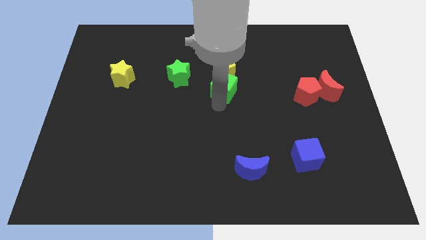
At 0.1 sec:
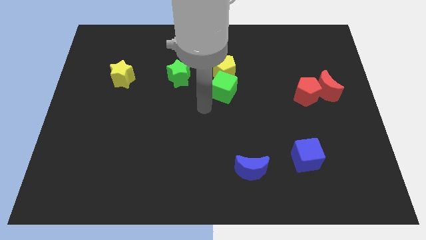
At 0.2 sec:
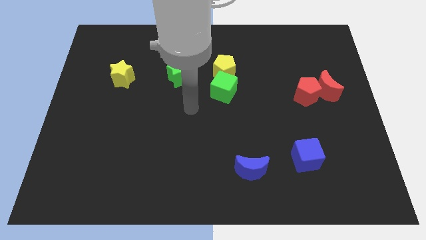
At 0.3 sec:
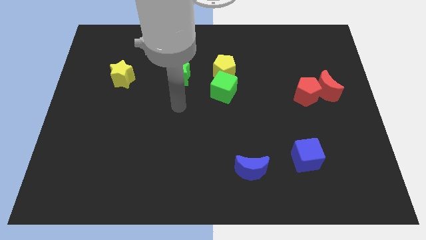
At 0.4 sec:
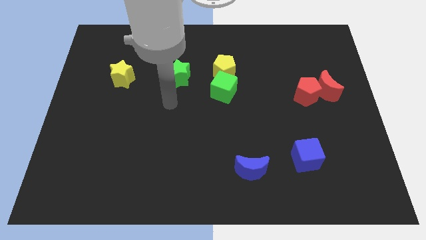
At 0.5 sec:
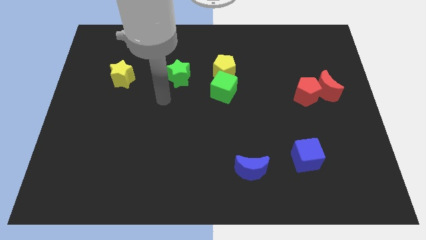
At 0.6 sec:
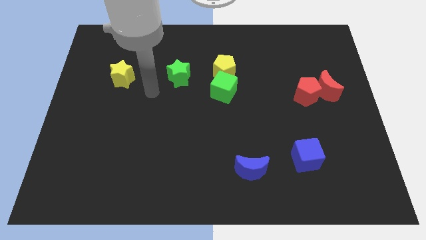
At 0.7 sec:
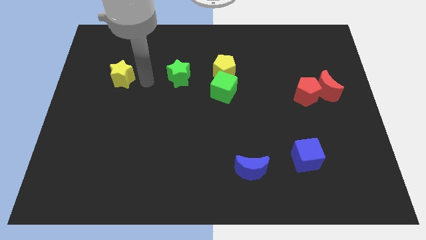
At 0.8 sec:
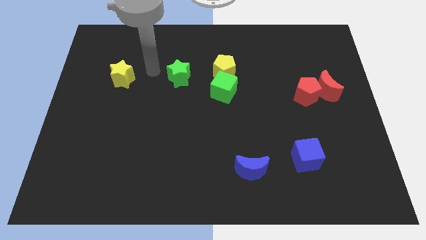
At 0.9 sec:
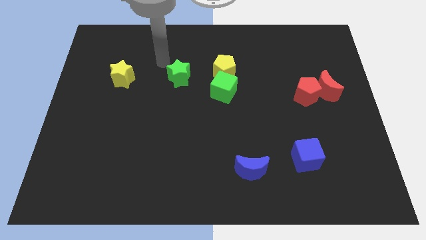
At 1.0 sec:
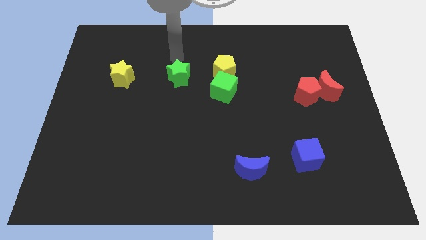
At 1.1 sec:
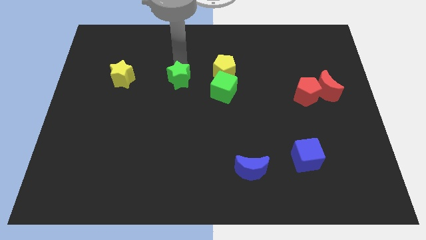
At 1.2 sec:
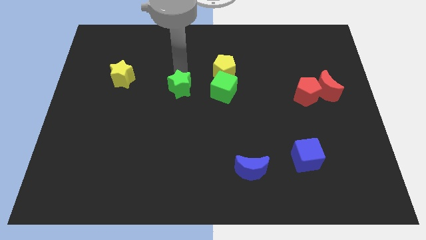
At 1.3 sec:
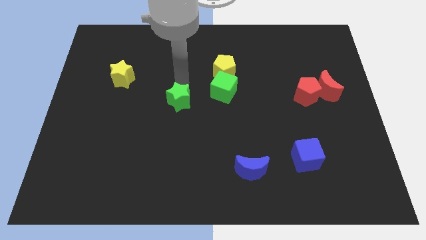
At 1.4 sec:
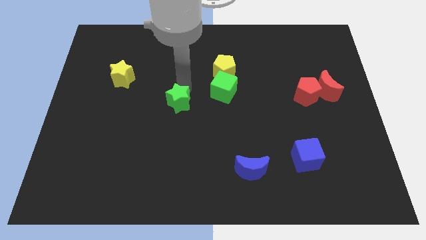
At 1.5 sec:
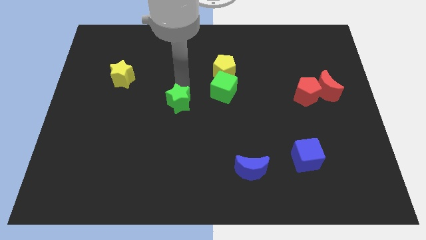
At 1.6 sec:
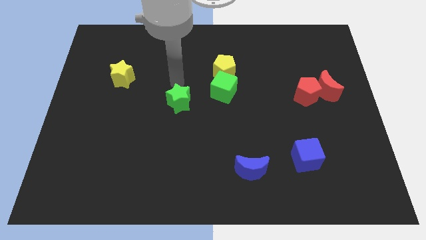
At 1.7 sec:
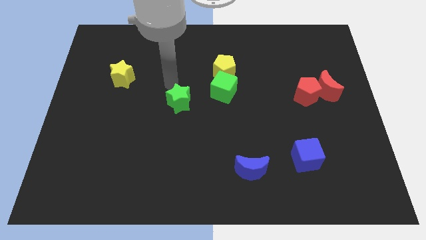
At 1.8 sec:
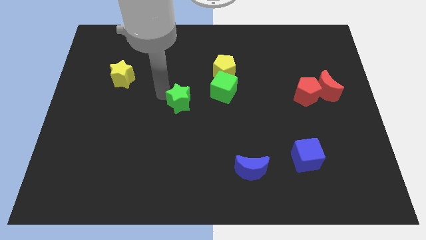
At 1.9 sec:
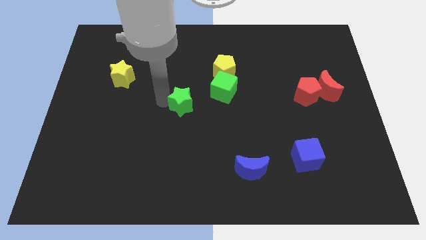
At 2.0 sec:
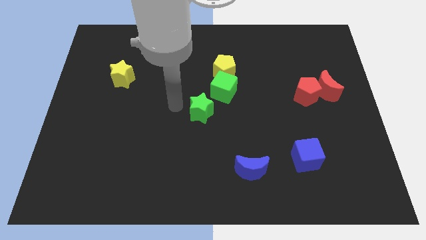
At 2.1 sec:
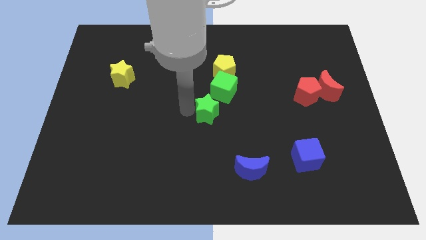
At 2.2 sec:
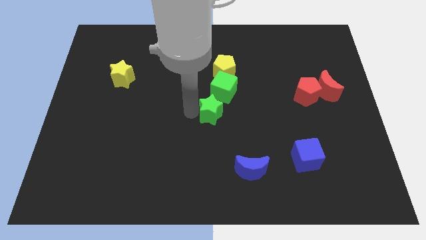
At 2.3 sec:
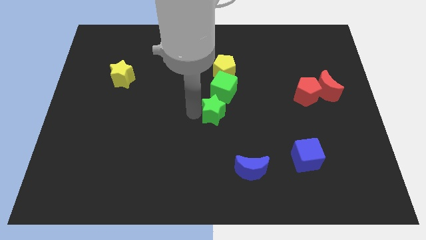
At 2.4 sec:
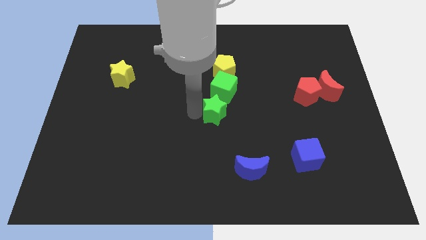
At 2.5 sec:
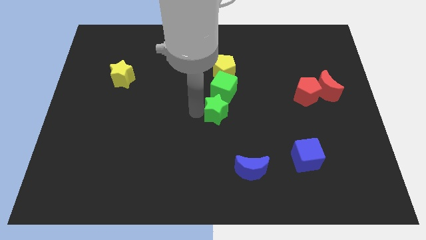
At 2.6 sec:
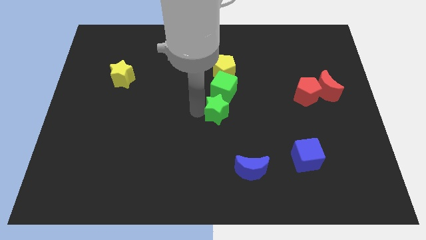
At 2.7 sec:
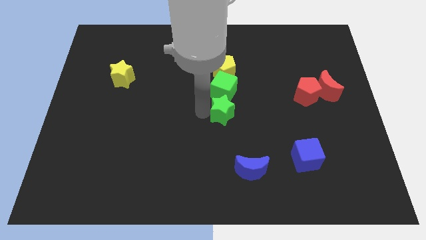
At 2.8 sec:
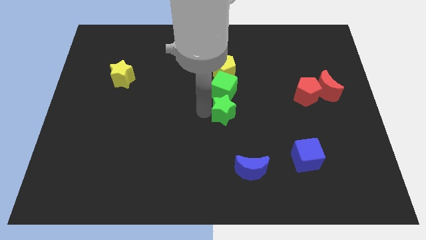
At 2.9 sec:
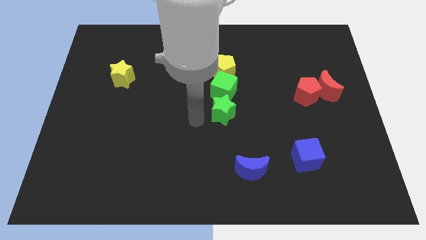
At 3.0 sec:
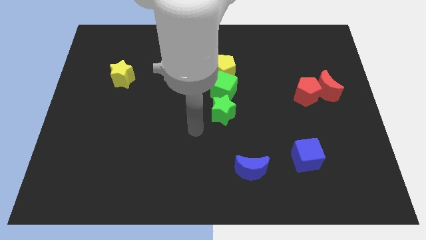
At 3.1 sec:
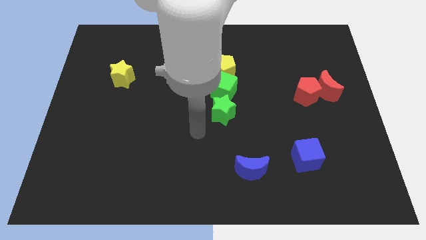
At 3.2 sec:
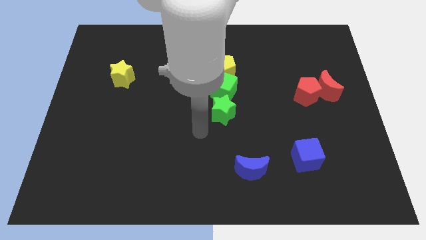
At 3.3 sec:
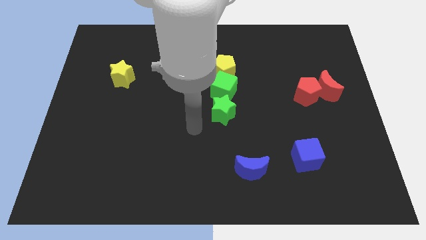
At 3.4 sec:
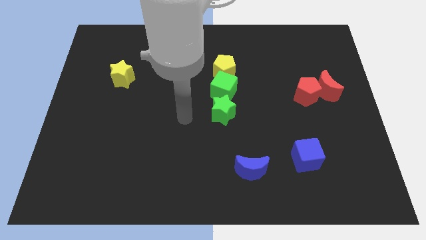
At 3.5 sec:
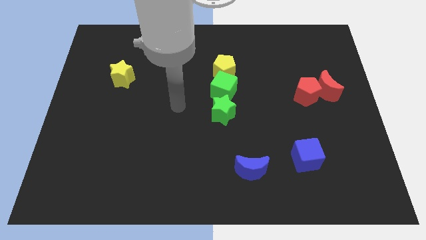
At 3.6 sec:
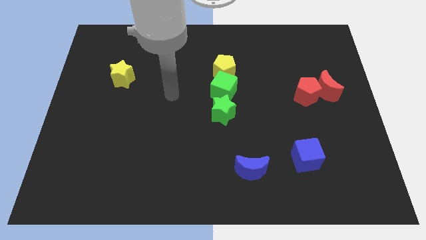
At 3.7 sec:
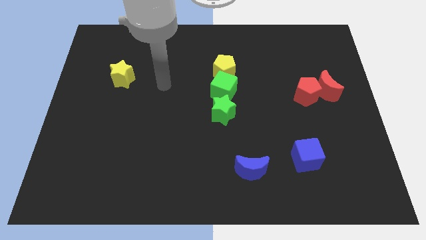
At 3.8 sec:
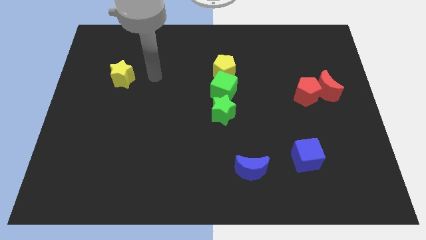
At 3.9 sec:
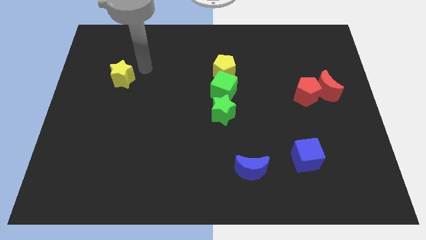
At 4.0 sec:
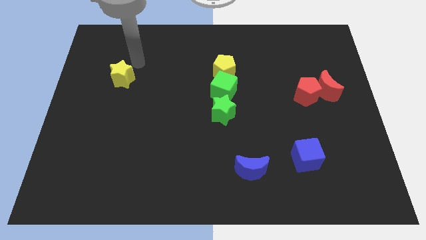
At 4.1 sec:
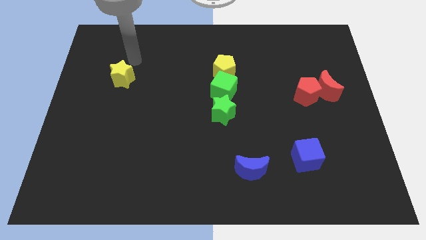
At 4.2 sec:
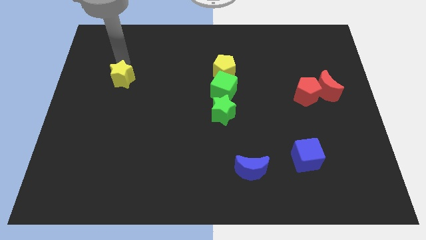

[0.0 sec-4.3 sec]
move the green star at the center

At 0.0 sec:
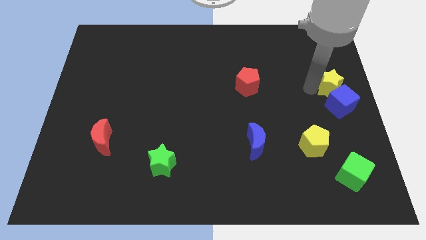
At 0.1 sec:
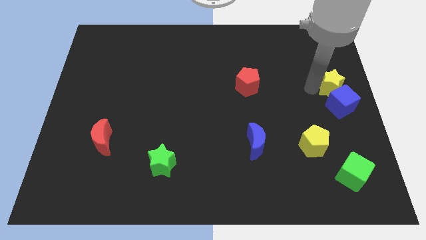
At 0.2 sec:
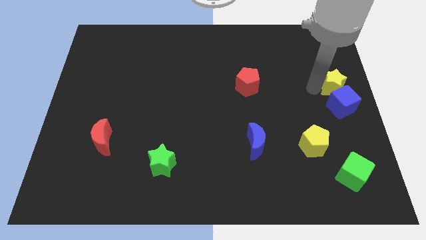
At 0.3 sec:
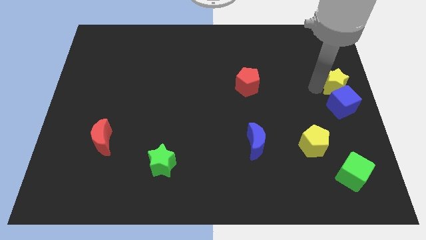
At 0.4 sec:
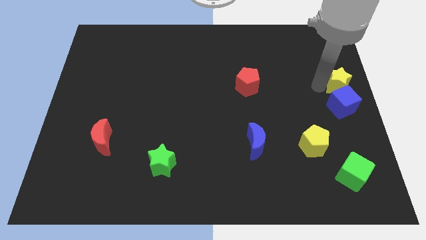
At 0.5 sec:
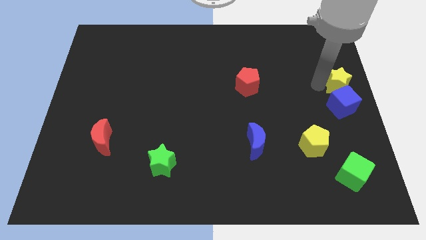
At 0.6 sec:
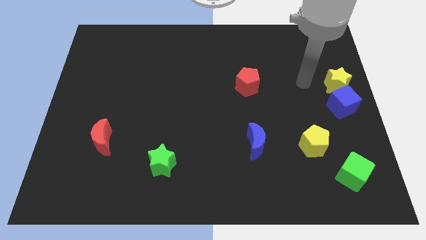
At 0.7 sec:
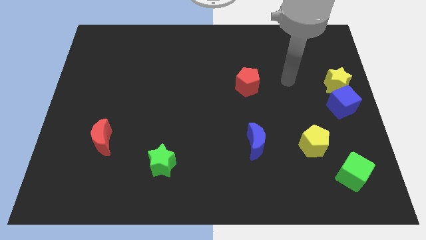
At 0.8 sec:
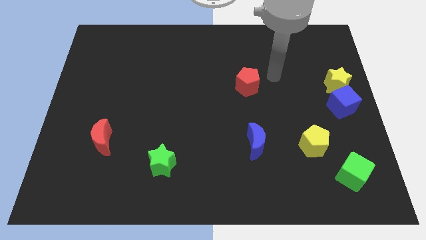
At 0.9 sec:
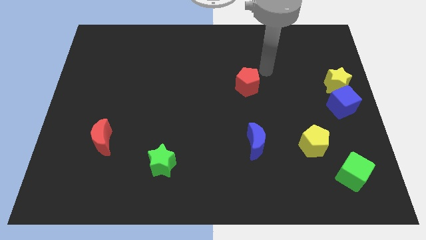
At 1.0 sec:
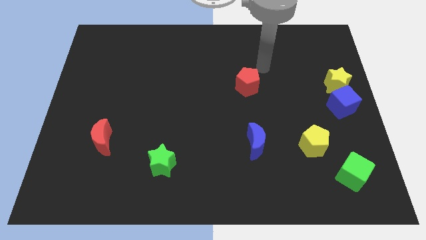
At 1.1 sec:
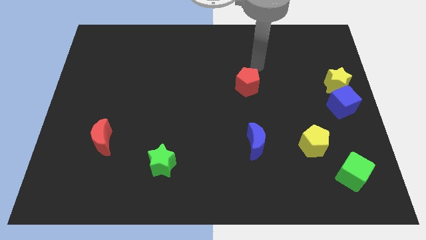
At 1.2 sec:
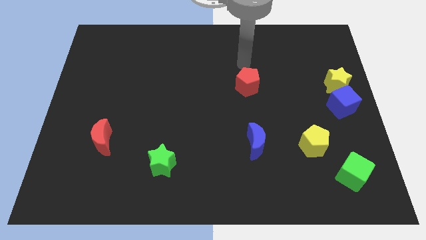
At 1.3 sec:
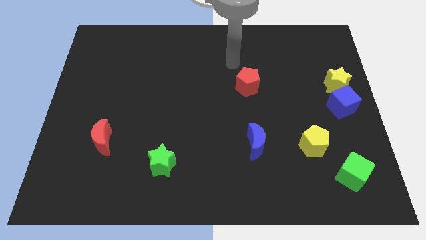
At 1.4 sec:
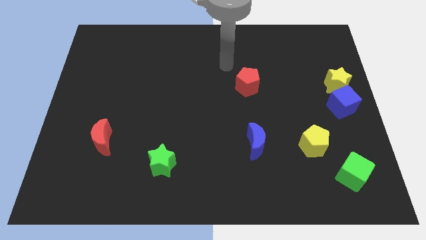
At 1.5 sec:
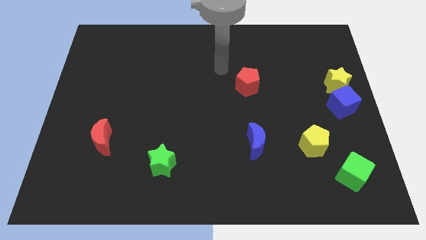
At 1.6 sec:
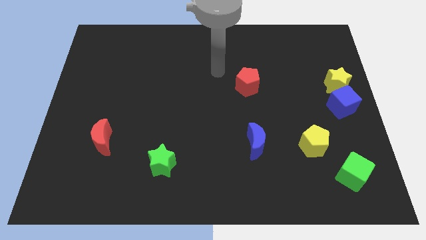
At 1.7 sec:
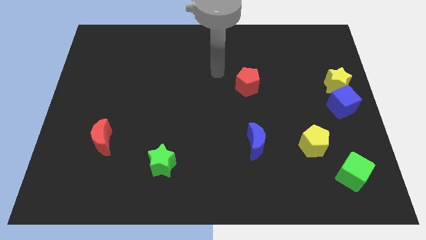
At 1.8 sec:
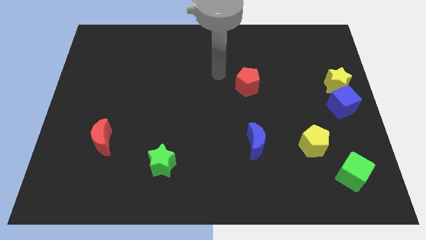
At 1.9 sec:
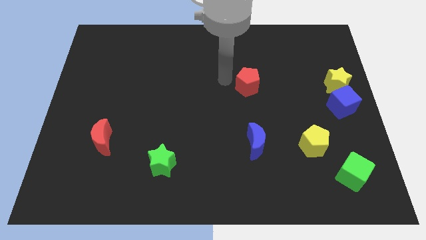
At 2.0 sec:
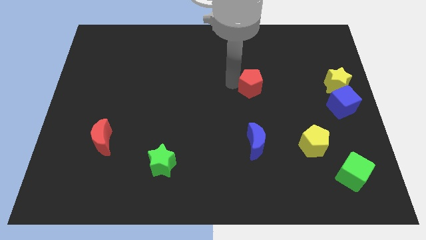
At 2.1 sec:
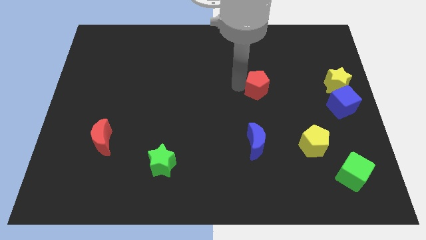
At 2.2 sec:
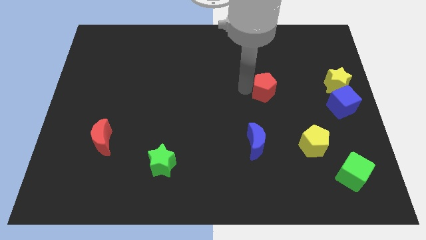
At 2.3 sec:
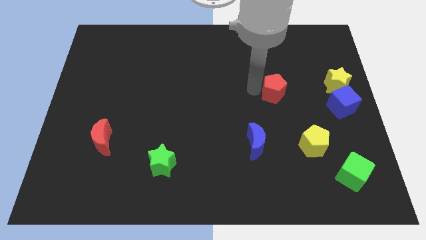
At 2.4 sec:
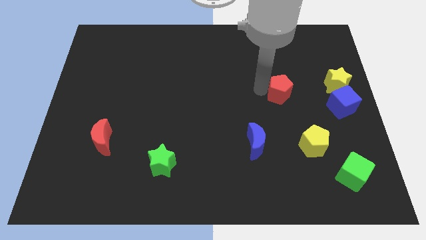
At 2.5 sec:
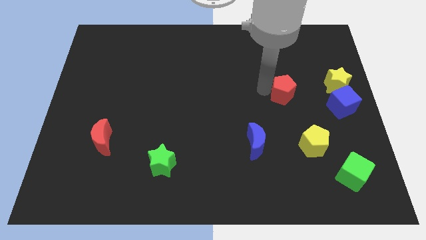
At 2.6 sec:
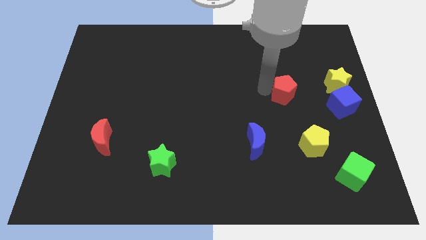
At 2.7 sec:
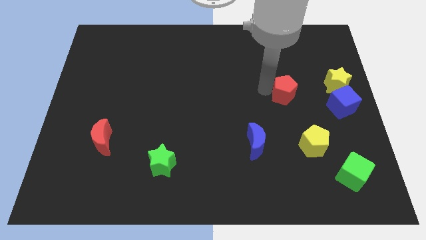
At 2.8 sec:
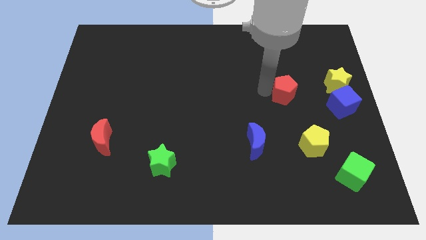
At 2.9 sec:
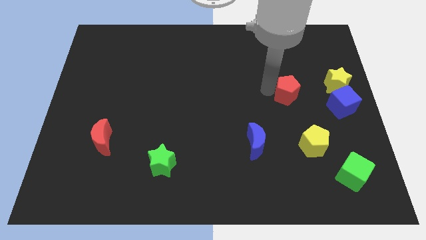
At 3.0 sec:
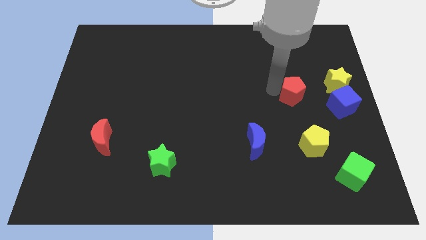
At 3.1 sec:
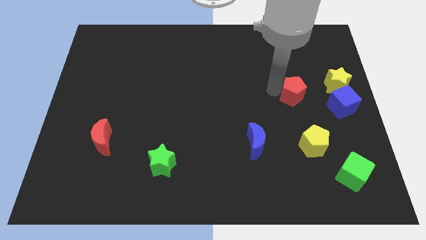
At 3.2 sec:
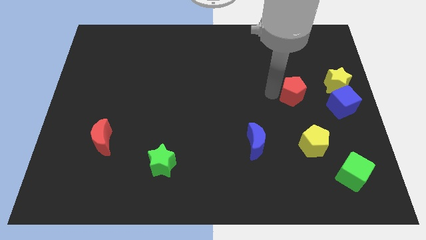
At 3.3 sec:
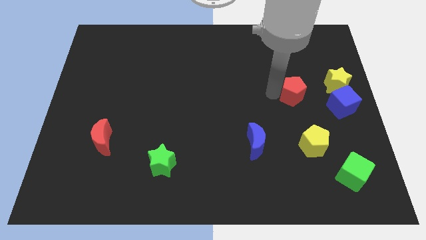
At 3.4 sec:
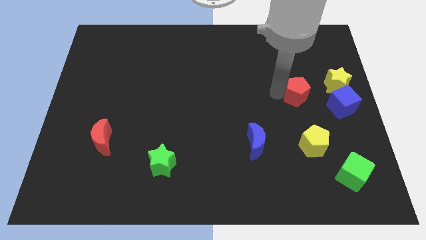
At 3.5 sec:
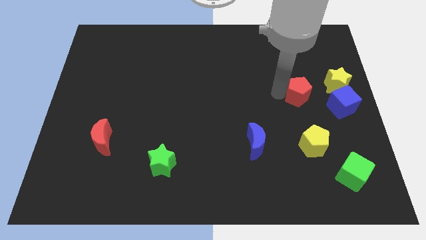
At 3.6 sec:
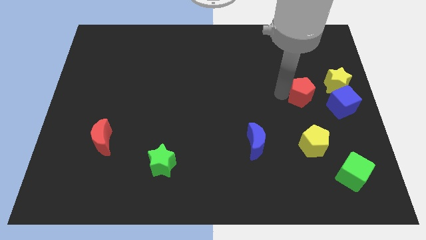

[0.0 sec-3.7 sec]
place the red pentagon diagonal to the left of the blue cube

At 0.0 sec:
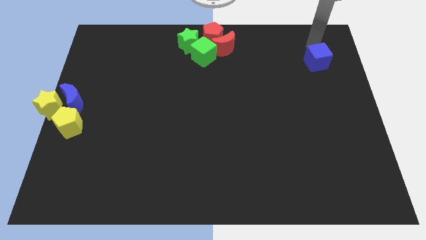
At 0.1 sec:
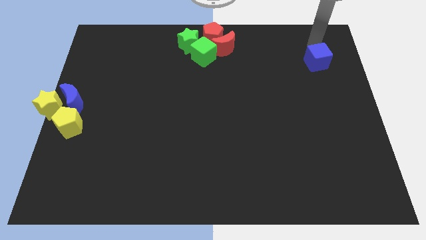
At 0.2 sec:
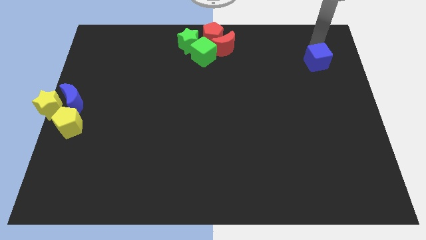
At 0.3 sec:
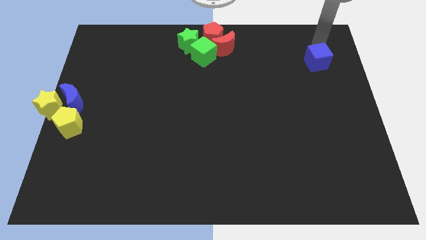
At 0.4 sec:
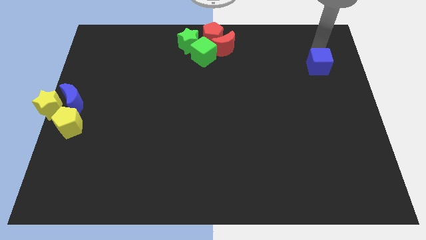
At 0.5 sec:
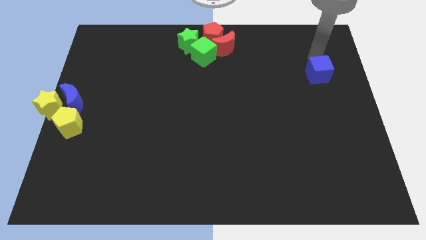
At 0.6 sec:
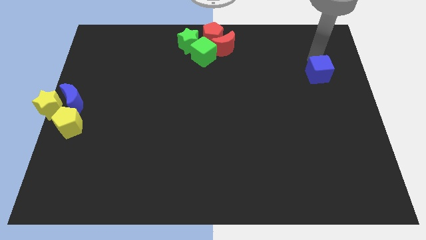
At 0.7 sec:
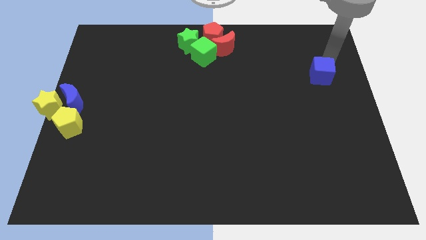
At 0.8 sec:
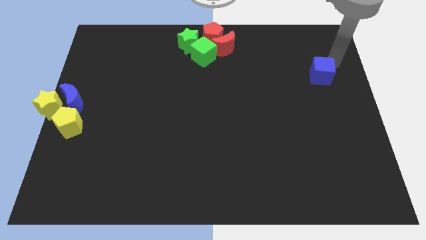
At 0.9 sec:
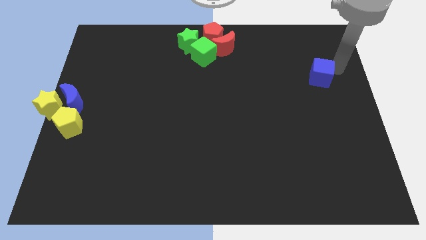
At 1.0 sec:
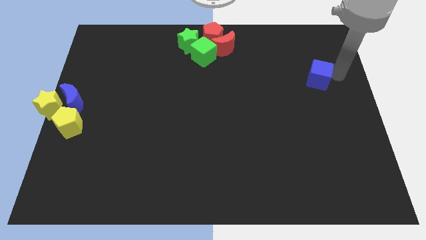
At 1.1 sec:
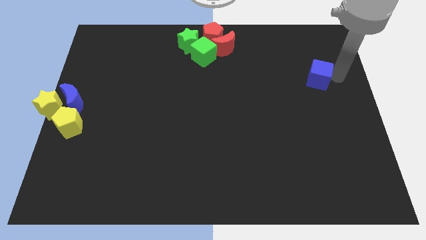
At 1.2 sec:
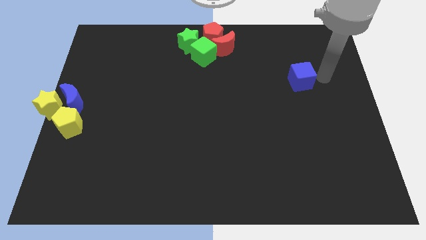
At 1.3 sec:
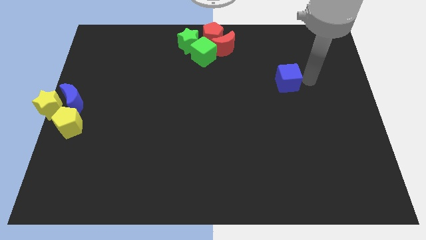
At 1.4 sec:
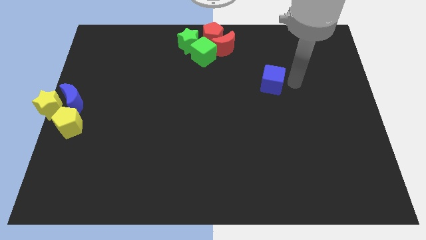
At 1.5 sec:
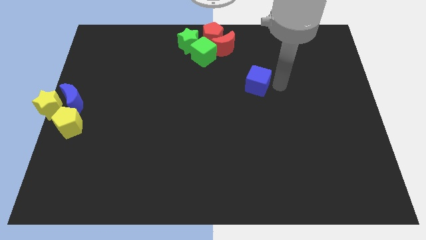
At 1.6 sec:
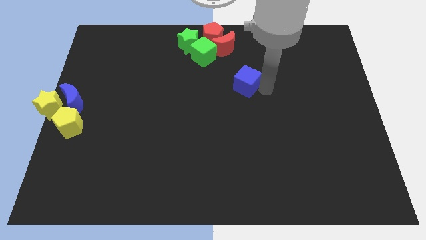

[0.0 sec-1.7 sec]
push the blue cube towards the center of the board
